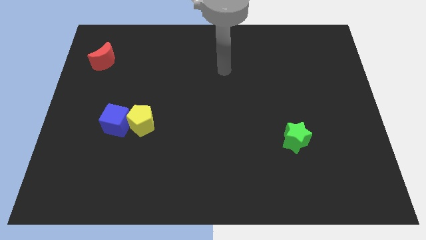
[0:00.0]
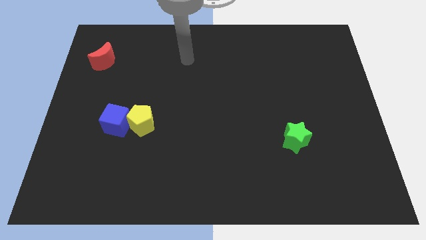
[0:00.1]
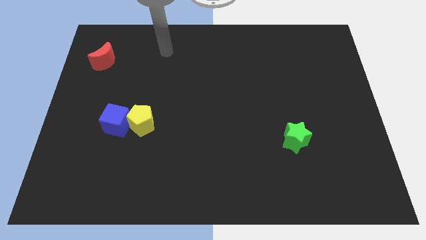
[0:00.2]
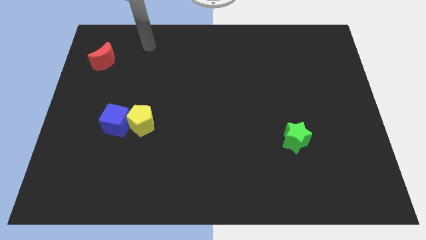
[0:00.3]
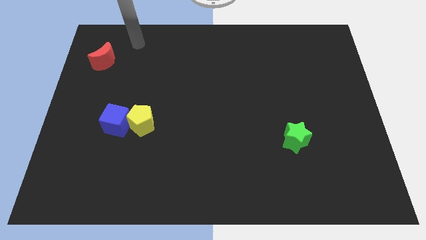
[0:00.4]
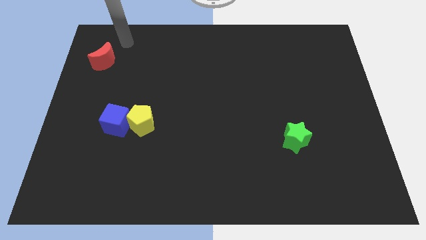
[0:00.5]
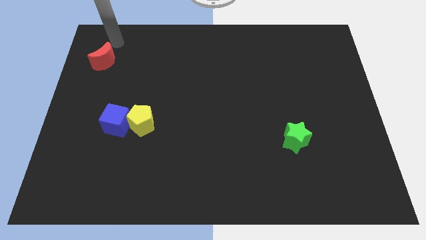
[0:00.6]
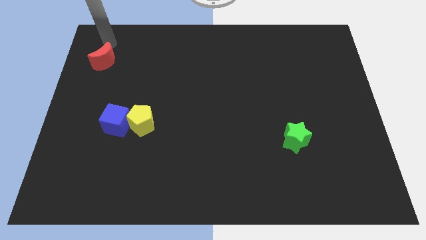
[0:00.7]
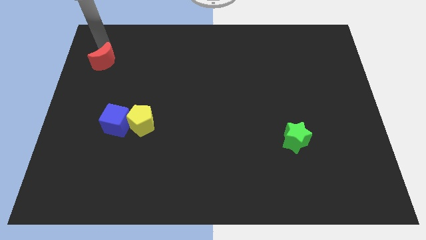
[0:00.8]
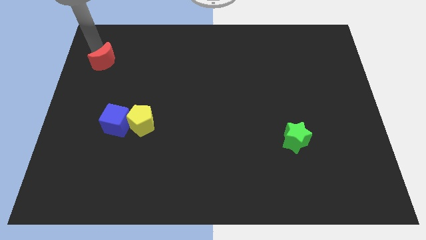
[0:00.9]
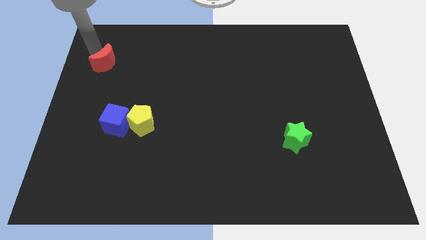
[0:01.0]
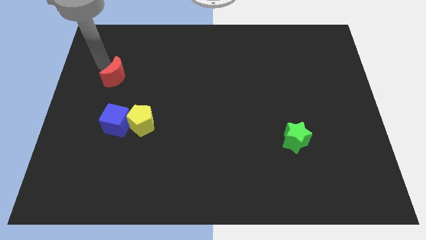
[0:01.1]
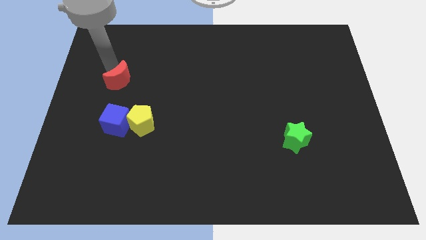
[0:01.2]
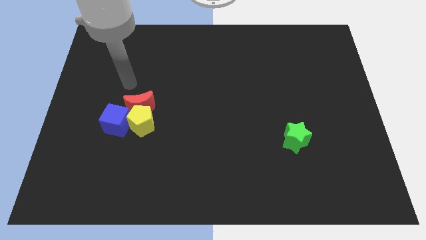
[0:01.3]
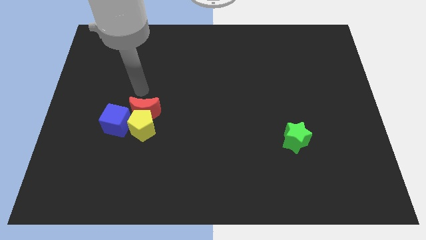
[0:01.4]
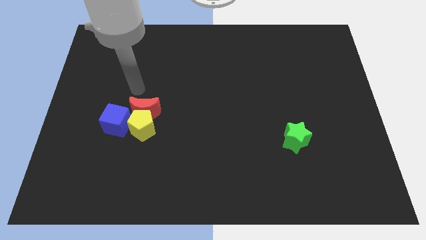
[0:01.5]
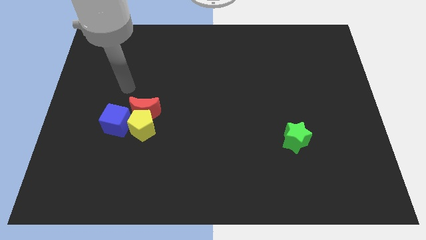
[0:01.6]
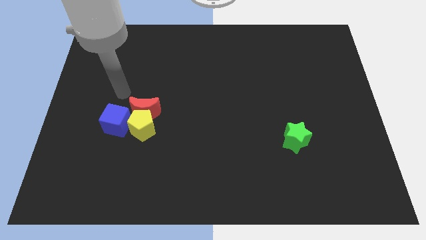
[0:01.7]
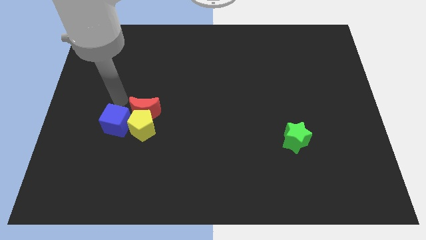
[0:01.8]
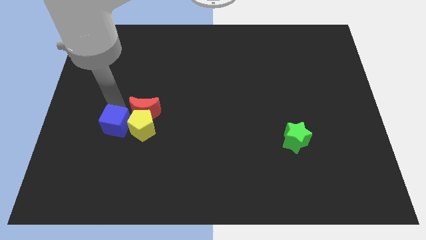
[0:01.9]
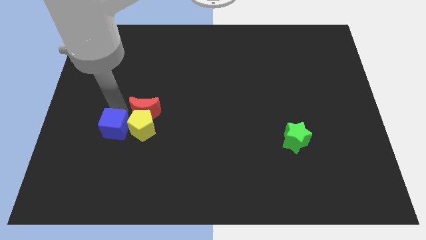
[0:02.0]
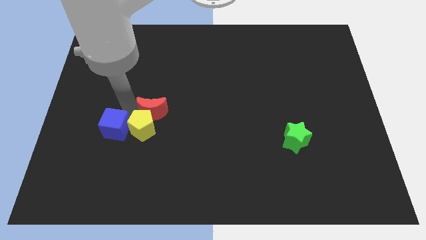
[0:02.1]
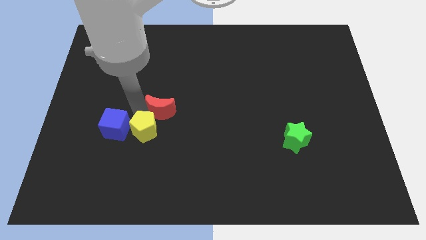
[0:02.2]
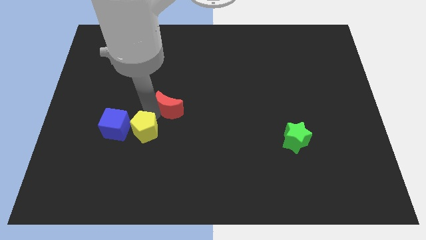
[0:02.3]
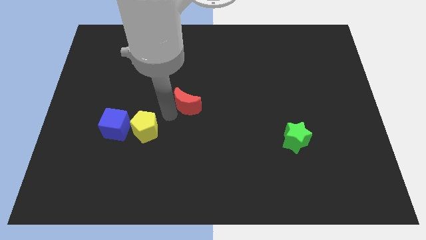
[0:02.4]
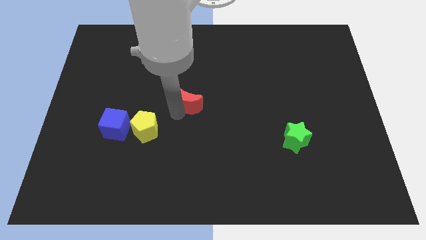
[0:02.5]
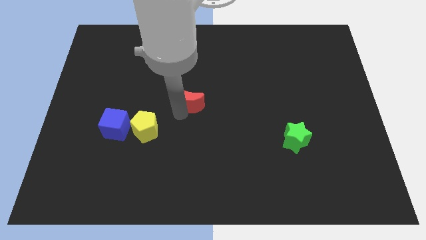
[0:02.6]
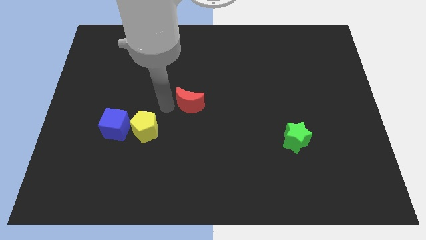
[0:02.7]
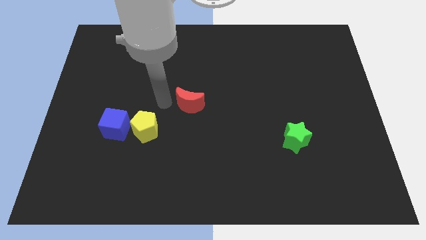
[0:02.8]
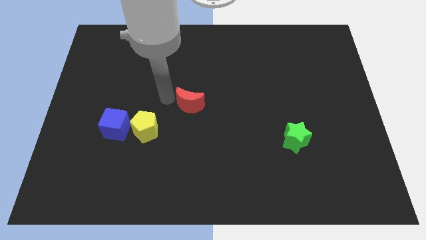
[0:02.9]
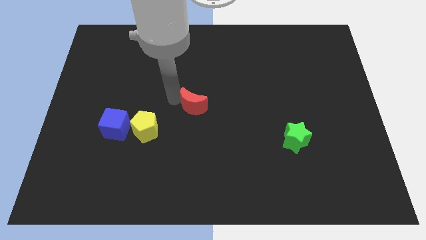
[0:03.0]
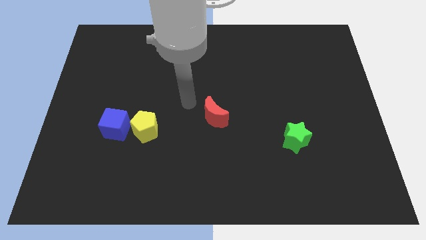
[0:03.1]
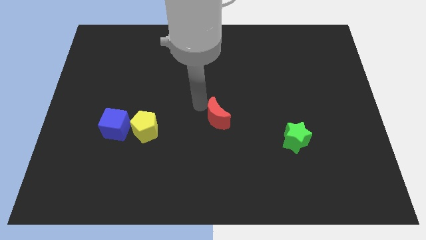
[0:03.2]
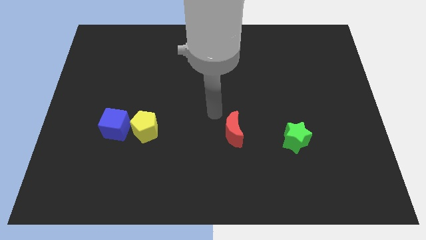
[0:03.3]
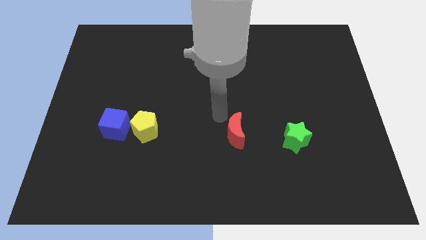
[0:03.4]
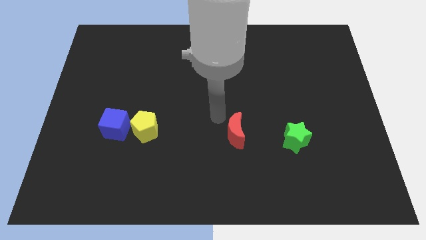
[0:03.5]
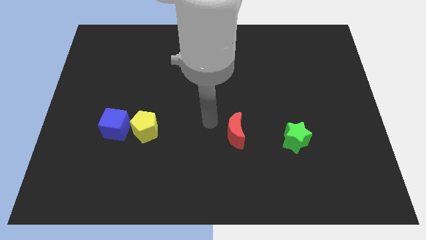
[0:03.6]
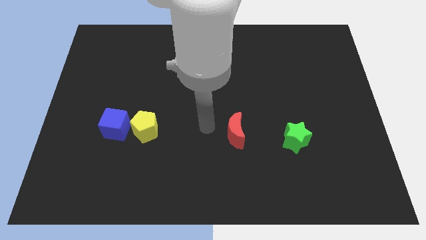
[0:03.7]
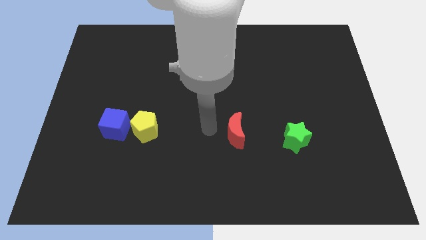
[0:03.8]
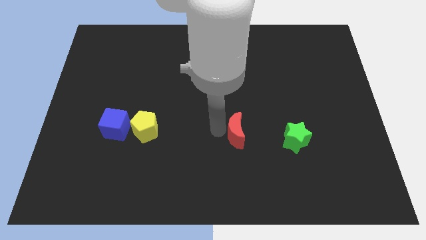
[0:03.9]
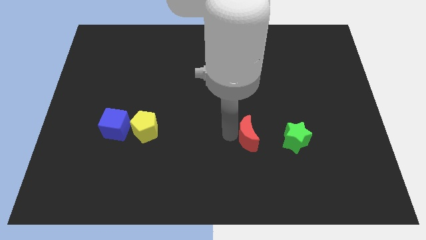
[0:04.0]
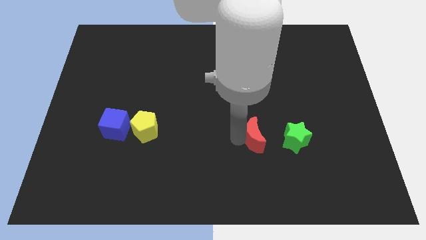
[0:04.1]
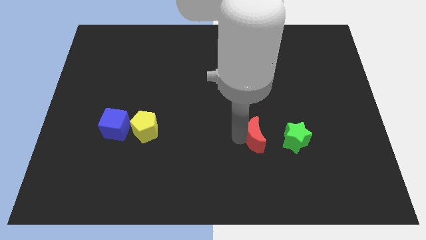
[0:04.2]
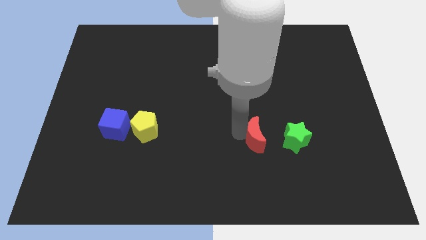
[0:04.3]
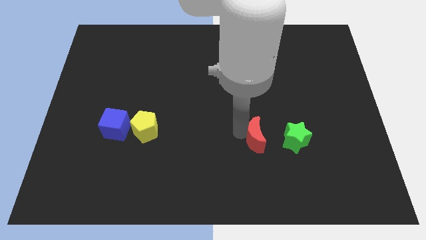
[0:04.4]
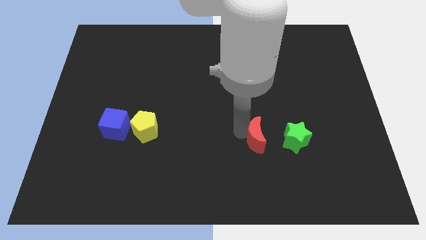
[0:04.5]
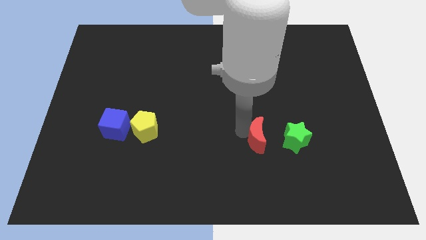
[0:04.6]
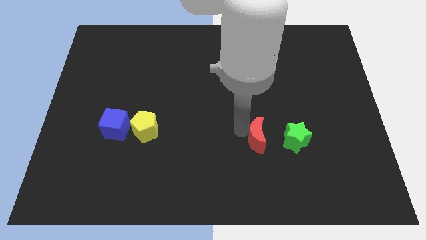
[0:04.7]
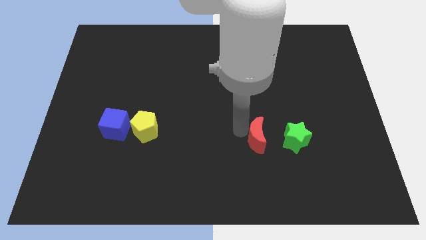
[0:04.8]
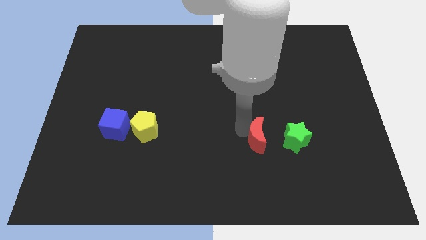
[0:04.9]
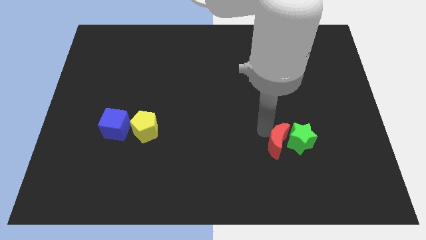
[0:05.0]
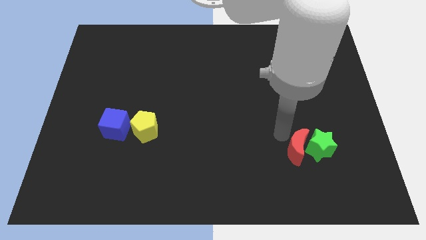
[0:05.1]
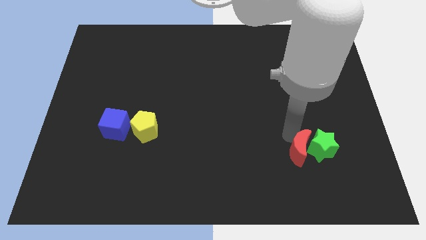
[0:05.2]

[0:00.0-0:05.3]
slide the red block towards the green star

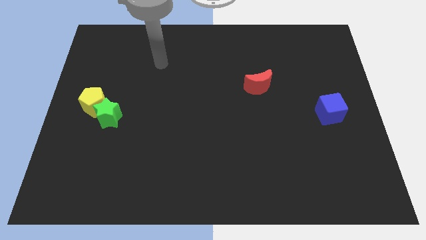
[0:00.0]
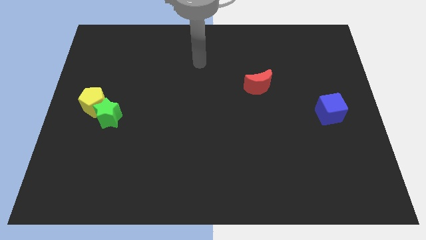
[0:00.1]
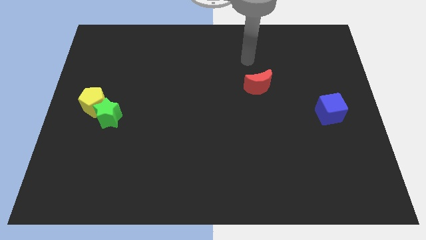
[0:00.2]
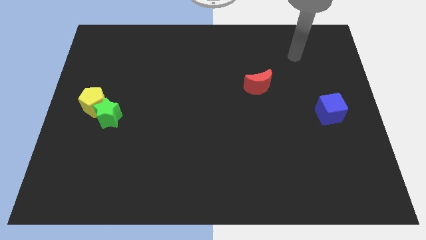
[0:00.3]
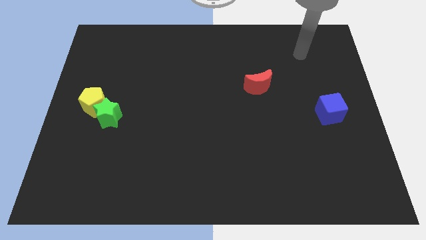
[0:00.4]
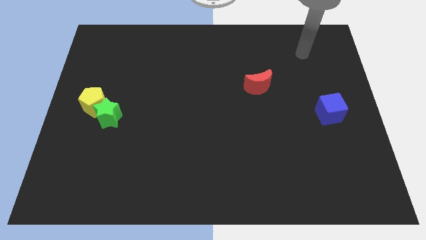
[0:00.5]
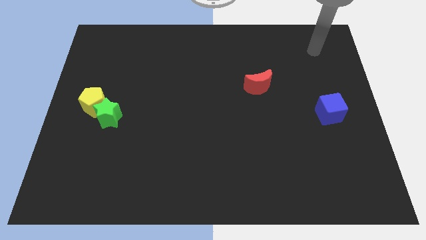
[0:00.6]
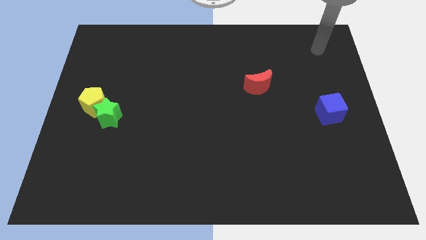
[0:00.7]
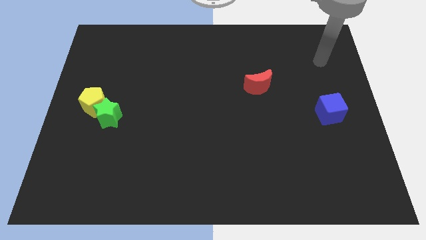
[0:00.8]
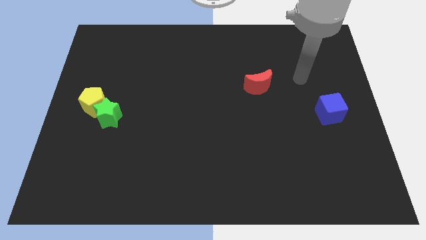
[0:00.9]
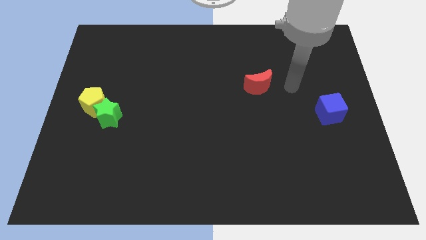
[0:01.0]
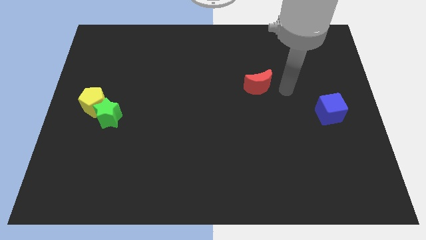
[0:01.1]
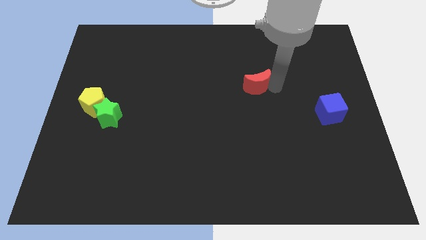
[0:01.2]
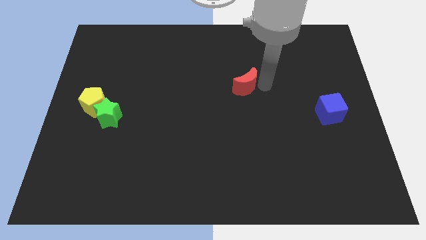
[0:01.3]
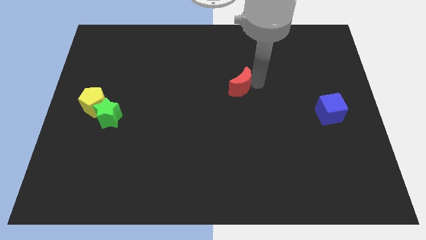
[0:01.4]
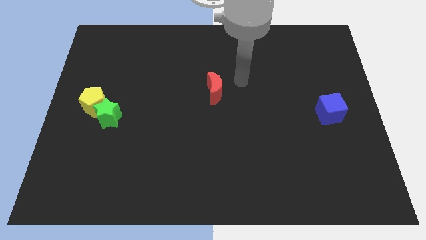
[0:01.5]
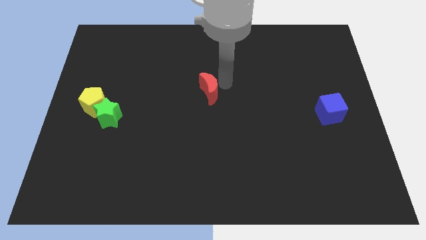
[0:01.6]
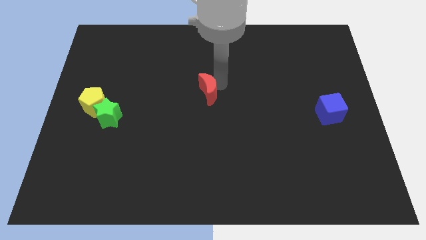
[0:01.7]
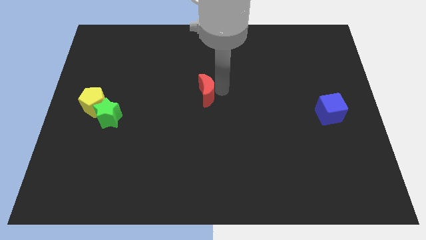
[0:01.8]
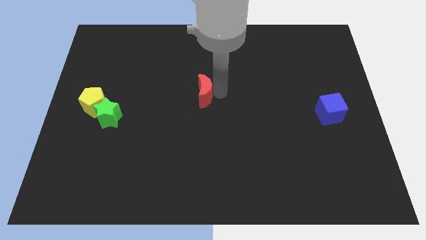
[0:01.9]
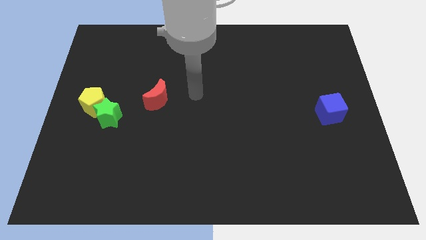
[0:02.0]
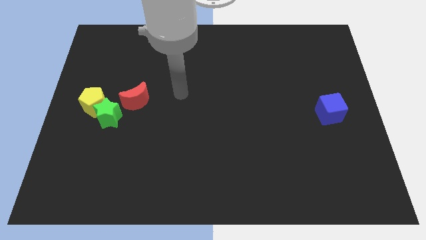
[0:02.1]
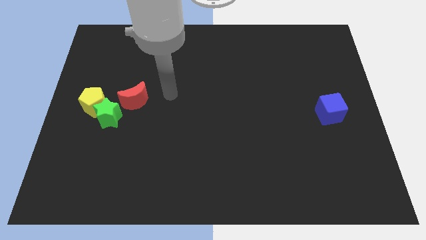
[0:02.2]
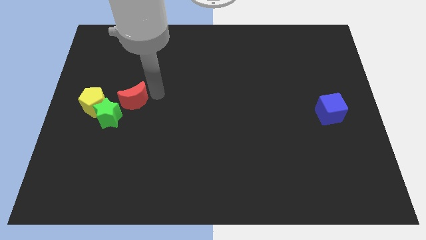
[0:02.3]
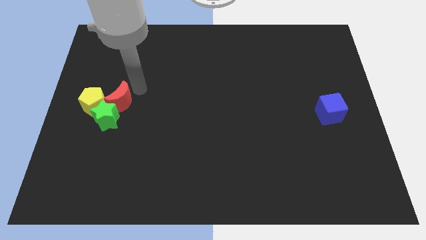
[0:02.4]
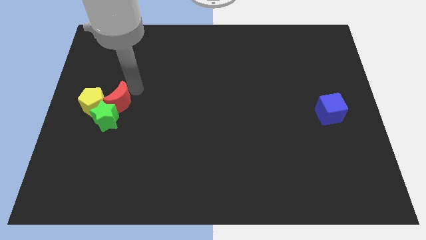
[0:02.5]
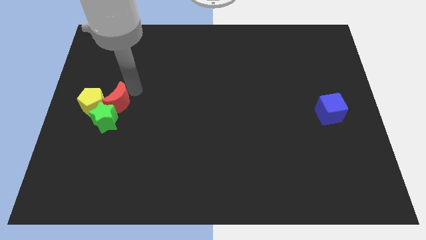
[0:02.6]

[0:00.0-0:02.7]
put the red moon close to the yellow block
